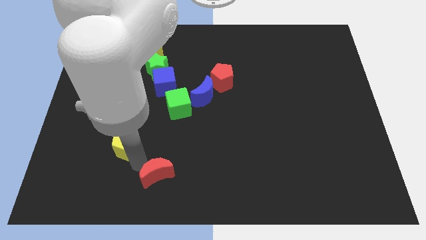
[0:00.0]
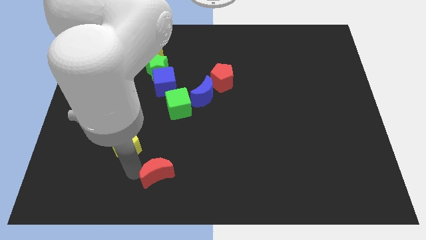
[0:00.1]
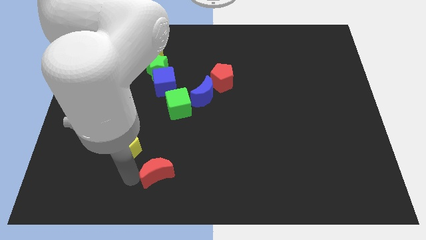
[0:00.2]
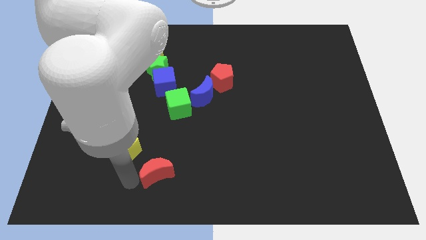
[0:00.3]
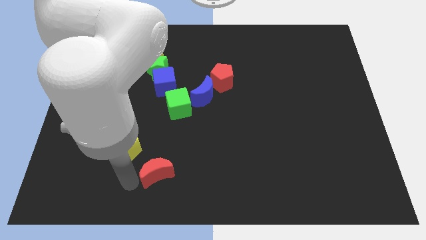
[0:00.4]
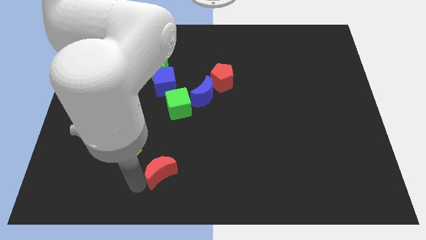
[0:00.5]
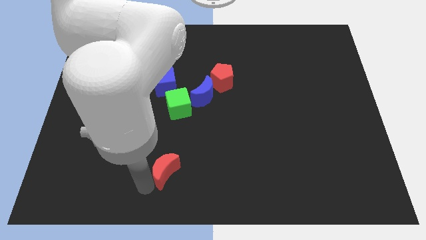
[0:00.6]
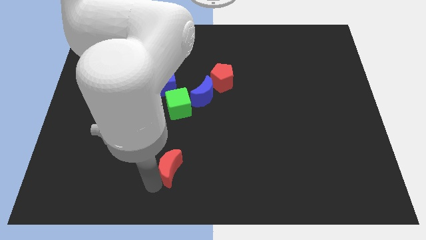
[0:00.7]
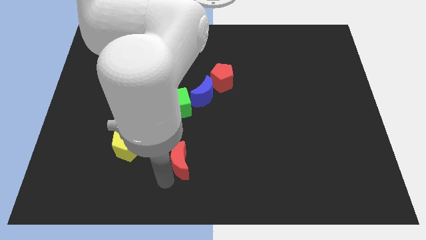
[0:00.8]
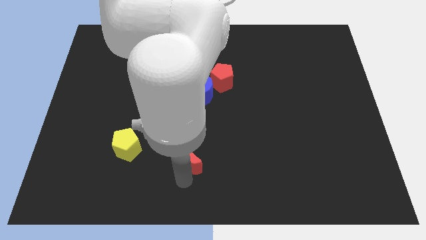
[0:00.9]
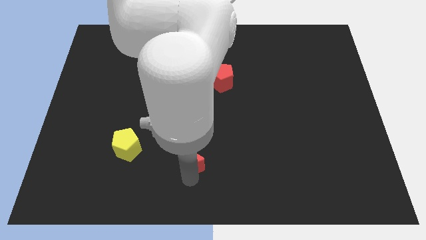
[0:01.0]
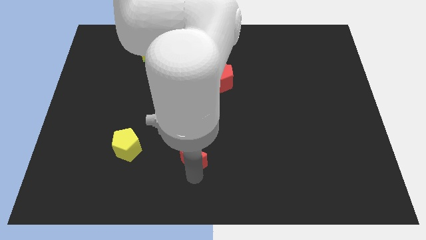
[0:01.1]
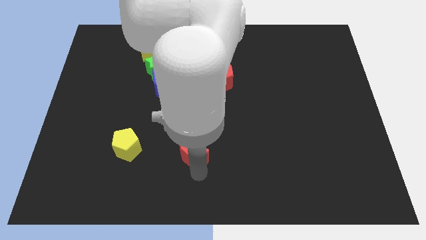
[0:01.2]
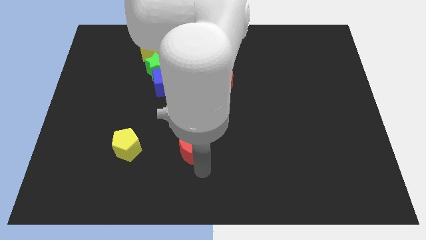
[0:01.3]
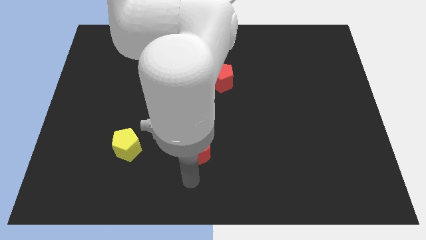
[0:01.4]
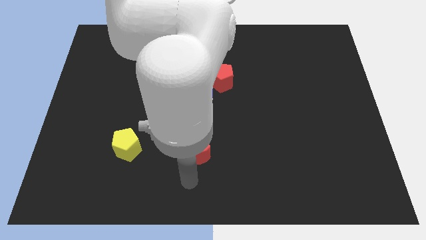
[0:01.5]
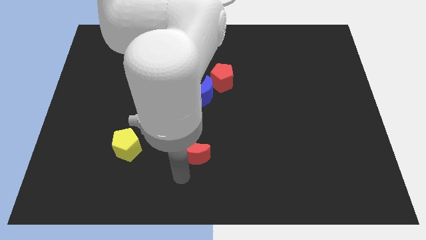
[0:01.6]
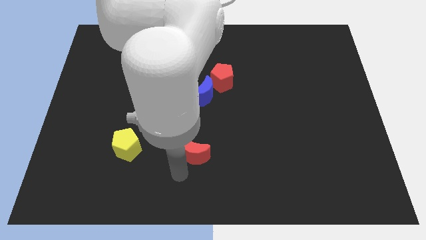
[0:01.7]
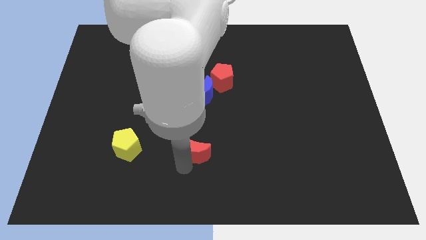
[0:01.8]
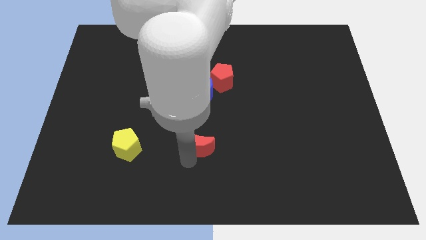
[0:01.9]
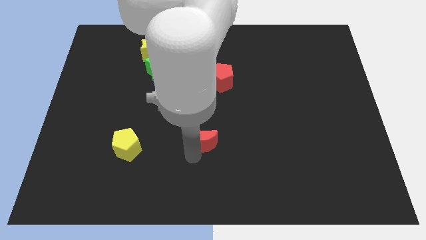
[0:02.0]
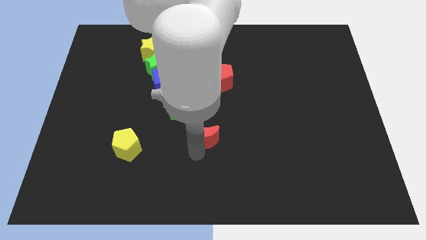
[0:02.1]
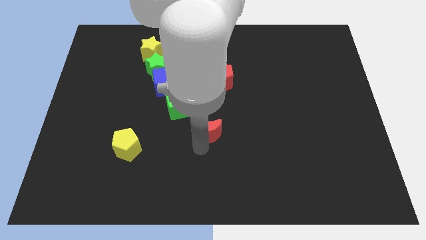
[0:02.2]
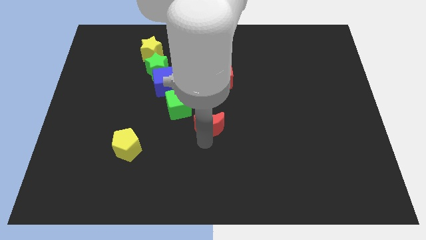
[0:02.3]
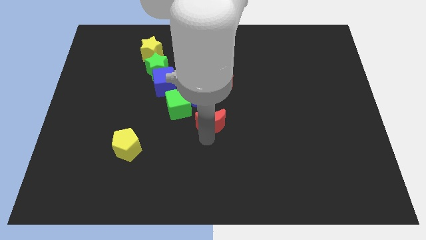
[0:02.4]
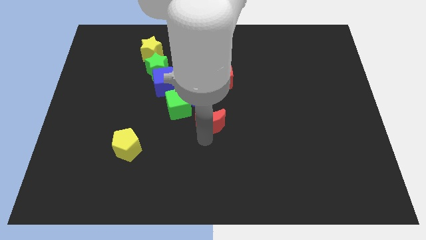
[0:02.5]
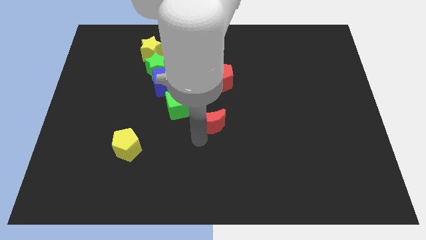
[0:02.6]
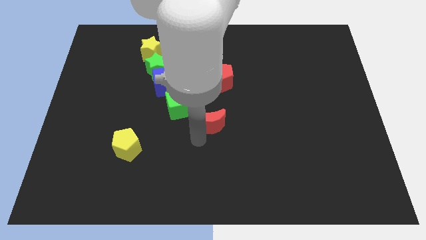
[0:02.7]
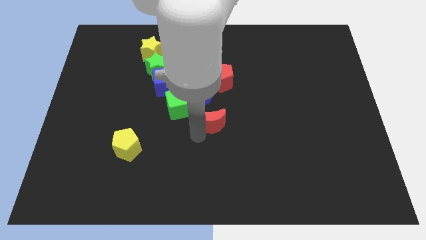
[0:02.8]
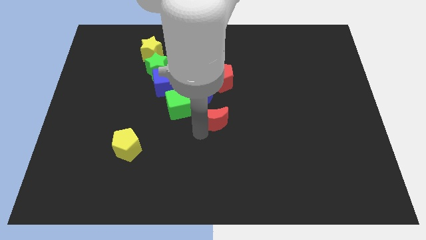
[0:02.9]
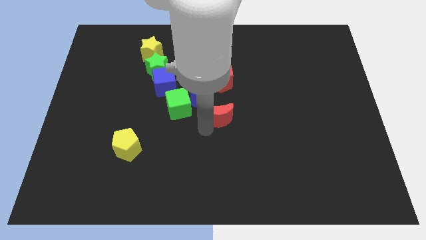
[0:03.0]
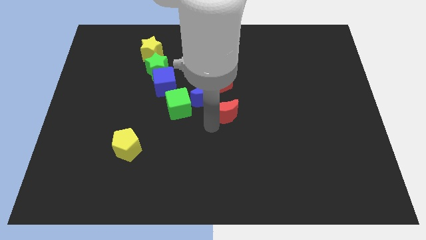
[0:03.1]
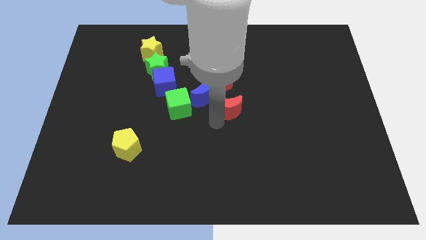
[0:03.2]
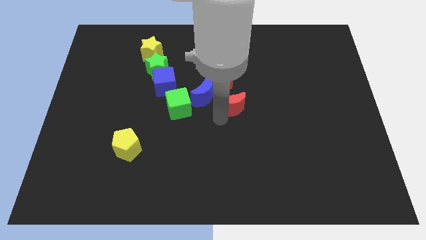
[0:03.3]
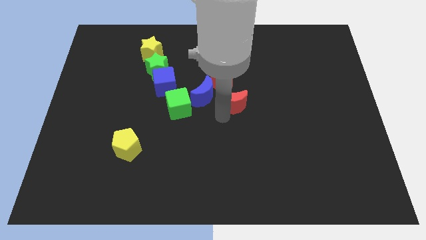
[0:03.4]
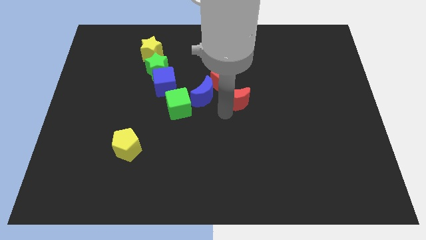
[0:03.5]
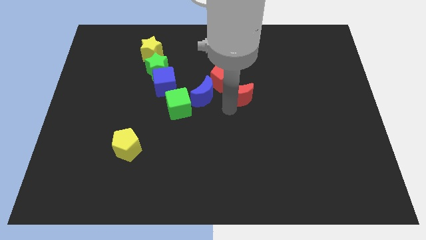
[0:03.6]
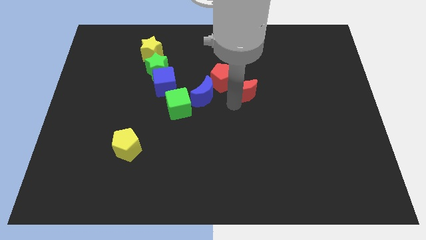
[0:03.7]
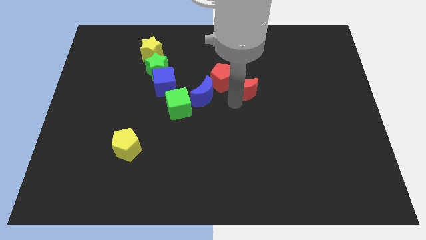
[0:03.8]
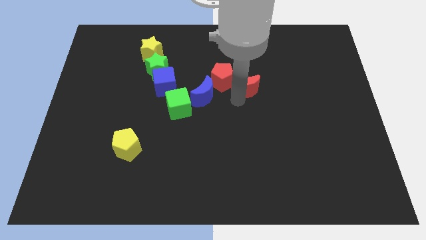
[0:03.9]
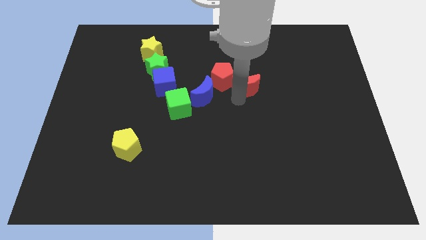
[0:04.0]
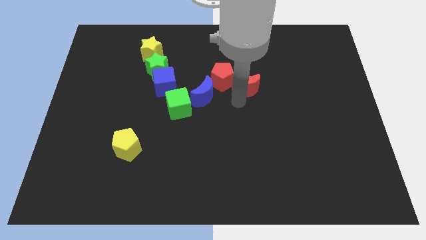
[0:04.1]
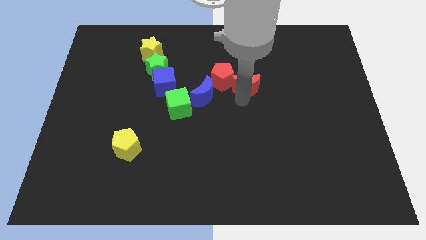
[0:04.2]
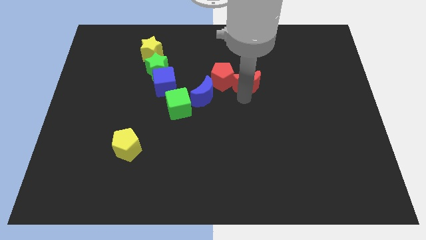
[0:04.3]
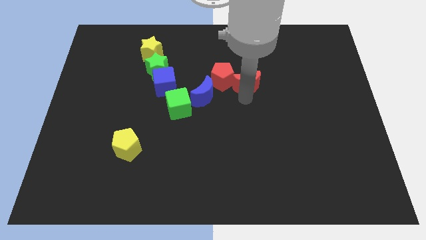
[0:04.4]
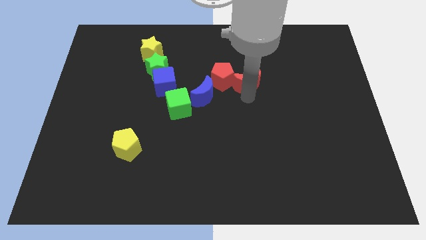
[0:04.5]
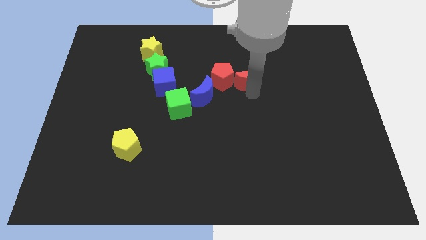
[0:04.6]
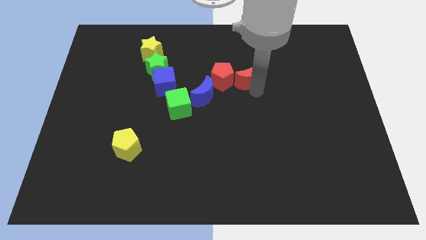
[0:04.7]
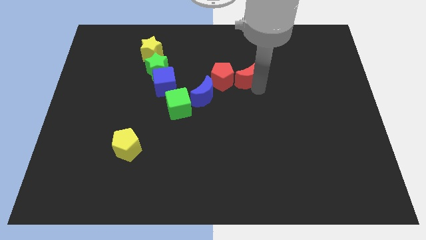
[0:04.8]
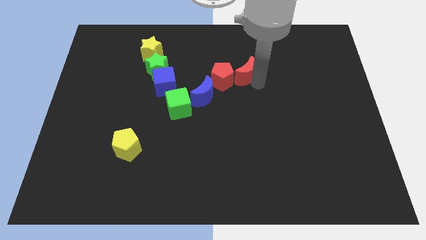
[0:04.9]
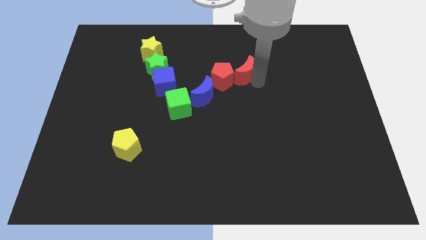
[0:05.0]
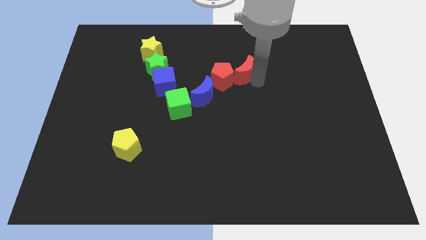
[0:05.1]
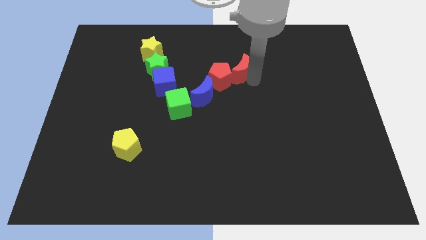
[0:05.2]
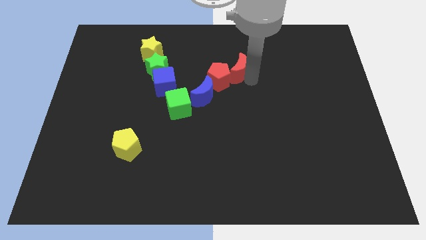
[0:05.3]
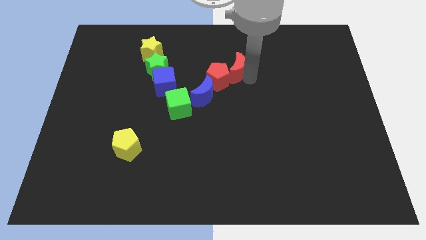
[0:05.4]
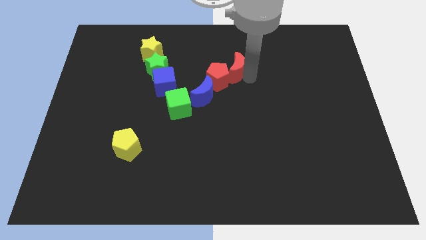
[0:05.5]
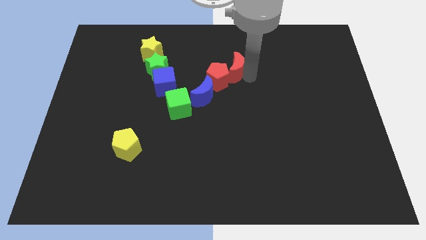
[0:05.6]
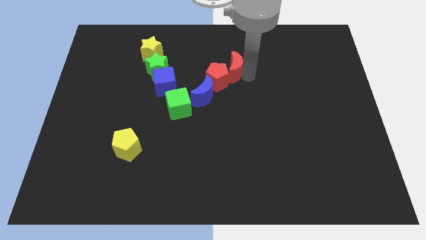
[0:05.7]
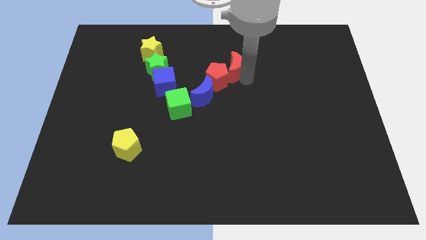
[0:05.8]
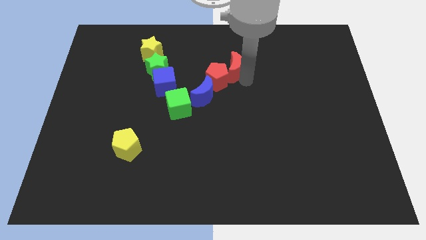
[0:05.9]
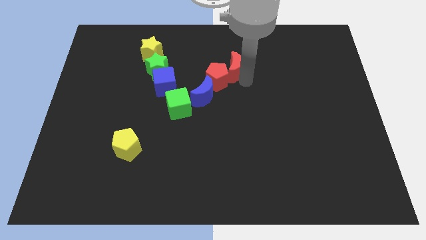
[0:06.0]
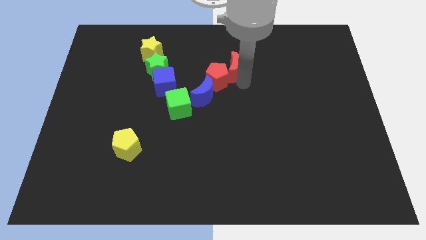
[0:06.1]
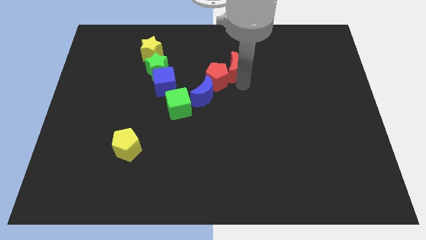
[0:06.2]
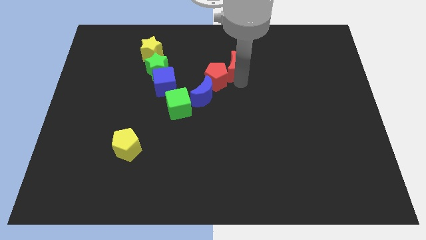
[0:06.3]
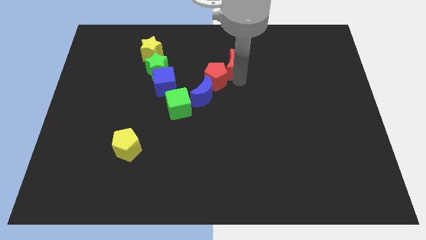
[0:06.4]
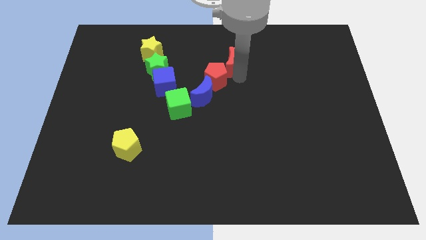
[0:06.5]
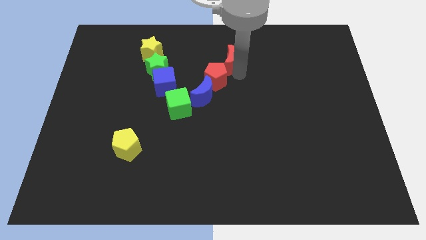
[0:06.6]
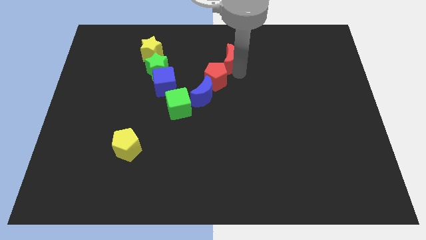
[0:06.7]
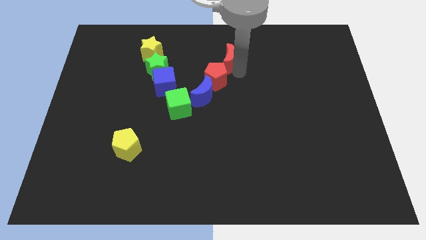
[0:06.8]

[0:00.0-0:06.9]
push the red moon into the red pentagon

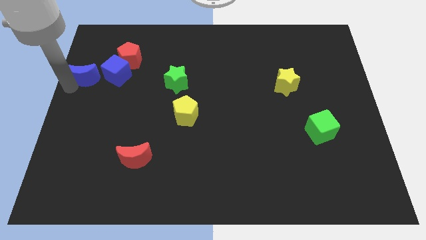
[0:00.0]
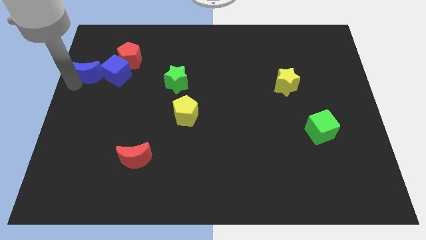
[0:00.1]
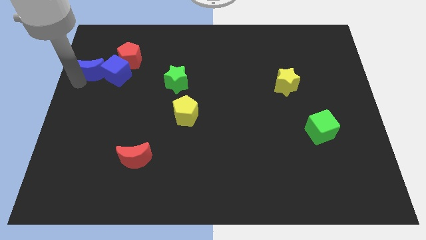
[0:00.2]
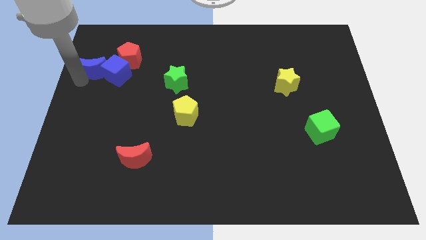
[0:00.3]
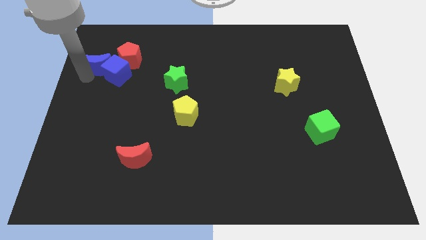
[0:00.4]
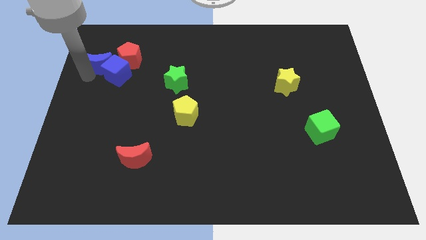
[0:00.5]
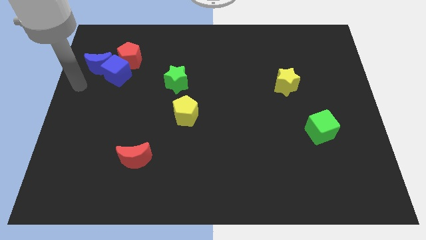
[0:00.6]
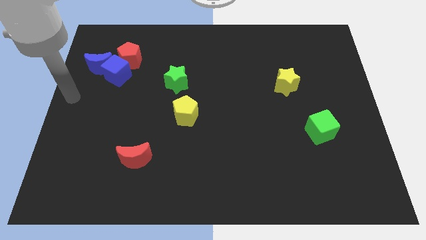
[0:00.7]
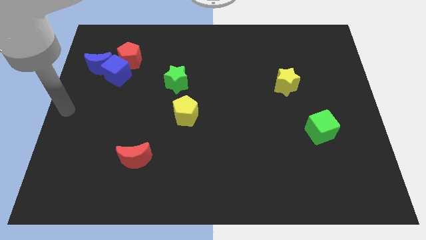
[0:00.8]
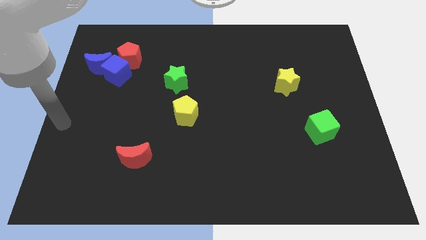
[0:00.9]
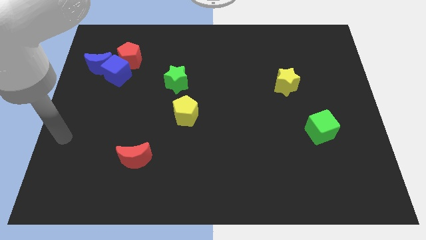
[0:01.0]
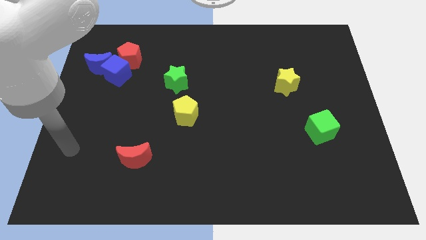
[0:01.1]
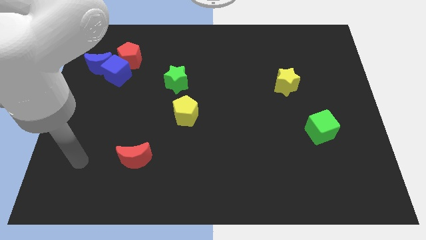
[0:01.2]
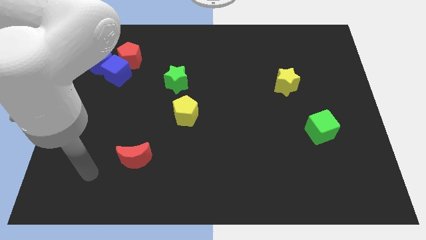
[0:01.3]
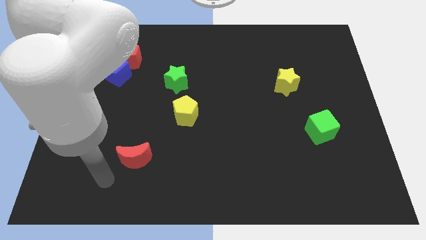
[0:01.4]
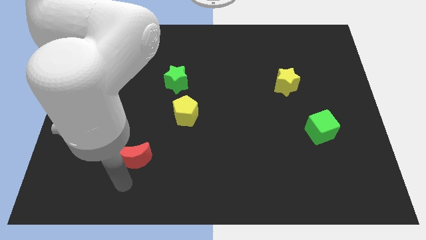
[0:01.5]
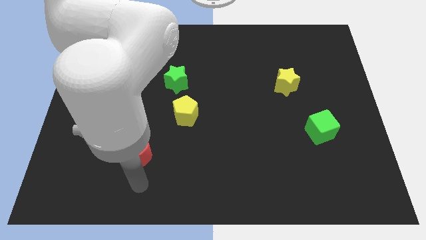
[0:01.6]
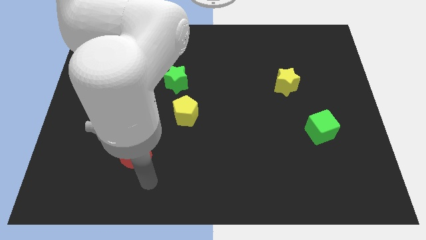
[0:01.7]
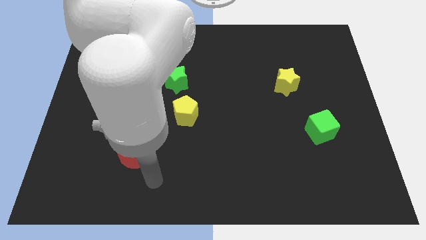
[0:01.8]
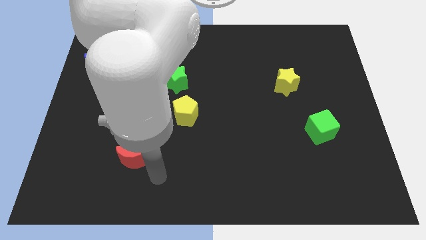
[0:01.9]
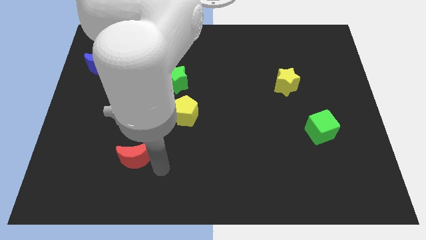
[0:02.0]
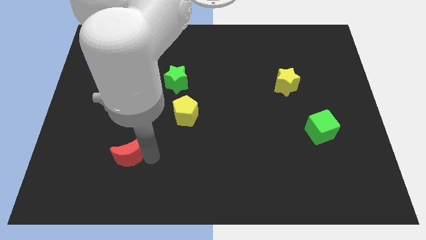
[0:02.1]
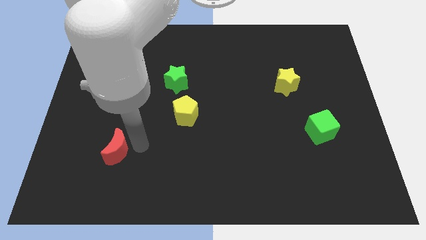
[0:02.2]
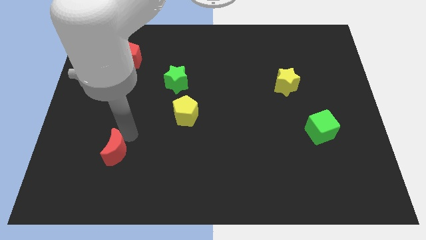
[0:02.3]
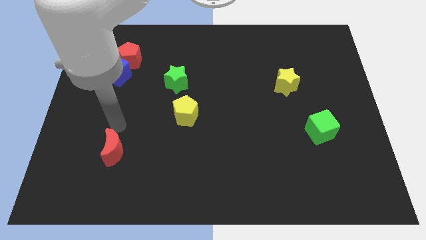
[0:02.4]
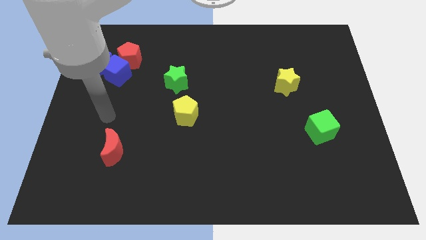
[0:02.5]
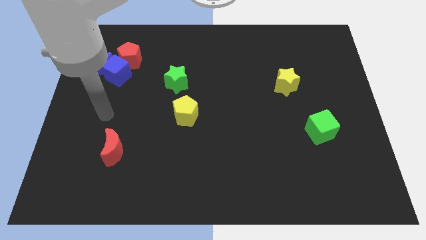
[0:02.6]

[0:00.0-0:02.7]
slightly push the red moon to the left
